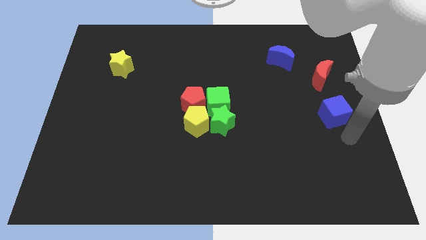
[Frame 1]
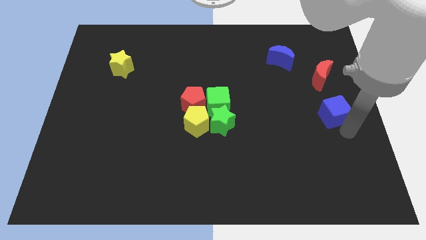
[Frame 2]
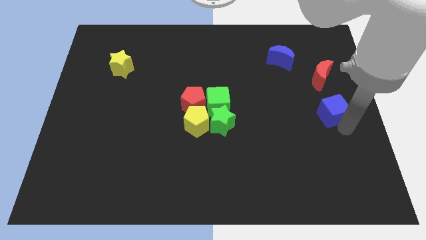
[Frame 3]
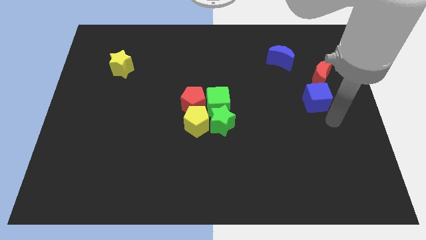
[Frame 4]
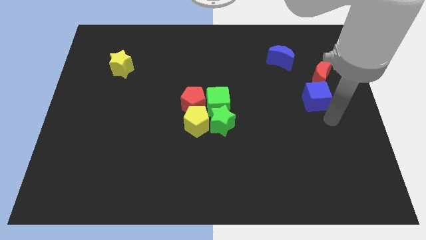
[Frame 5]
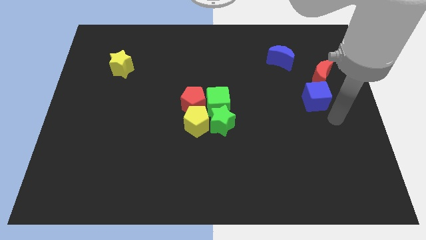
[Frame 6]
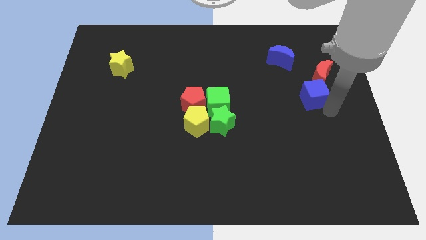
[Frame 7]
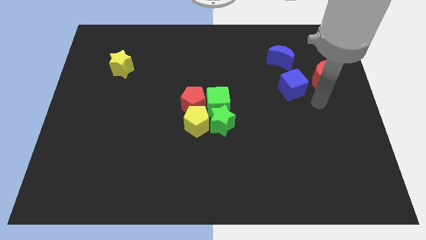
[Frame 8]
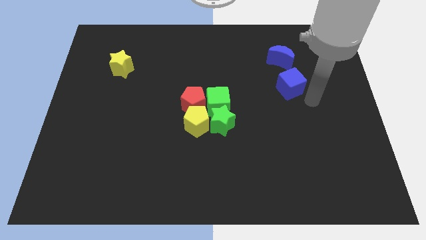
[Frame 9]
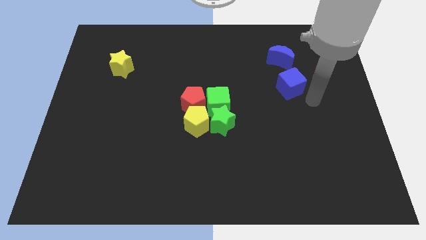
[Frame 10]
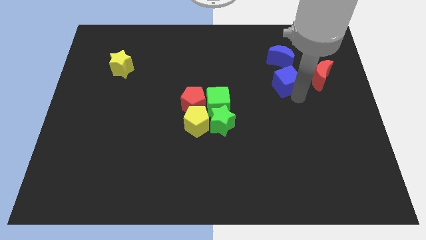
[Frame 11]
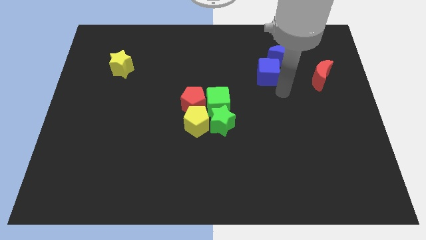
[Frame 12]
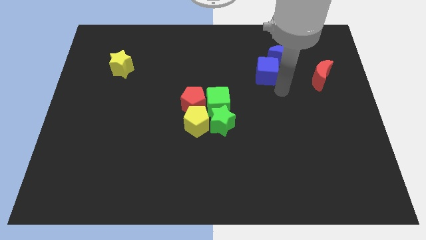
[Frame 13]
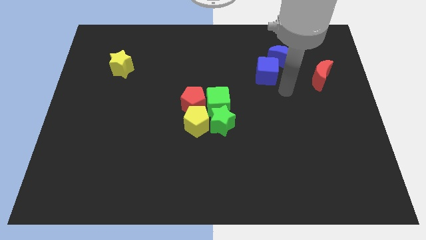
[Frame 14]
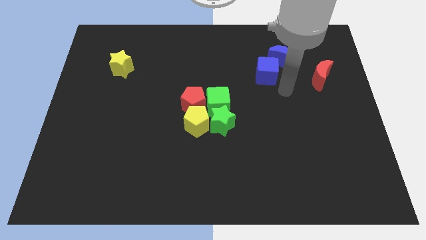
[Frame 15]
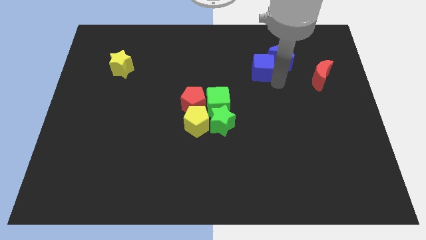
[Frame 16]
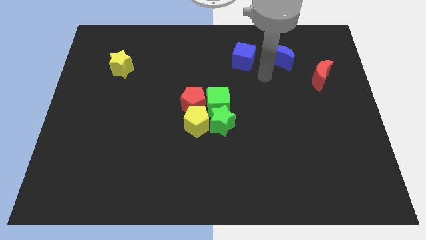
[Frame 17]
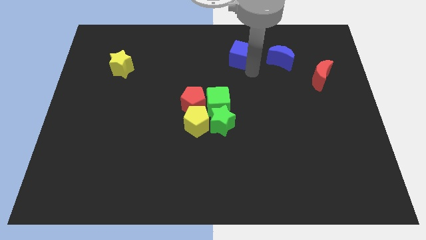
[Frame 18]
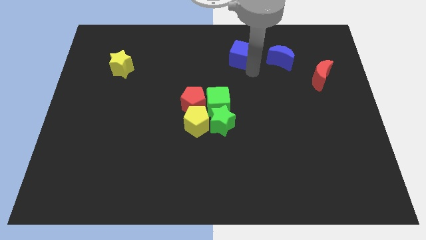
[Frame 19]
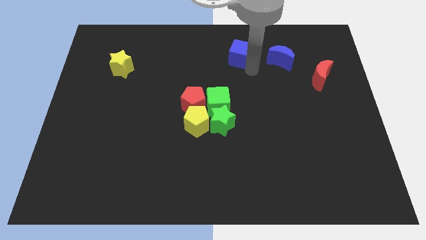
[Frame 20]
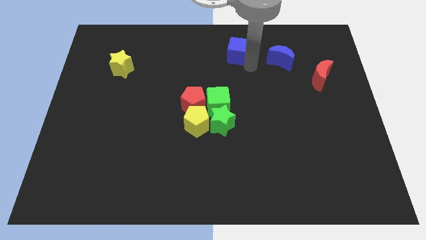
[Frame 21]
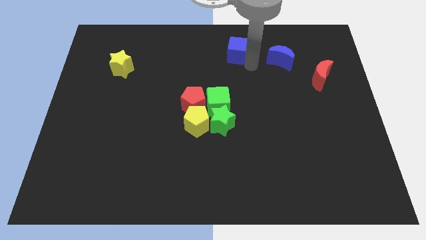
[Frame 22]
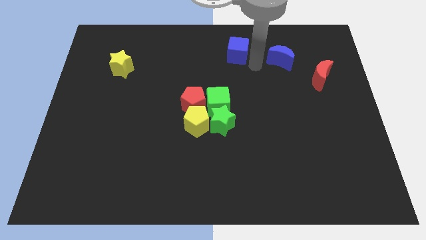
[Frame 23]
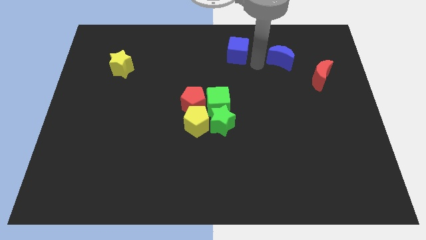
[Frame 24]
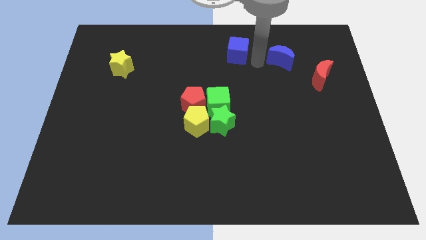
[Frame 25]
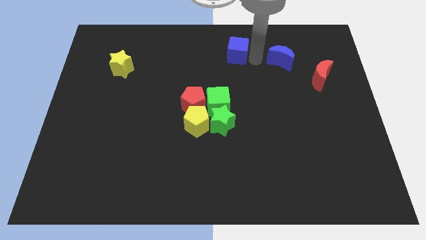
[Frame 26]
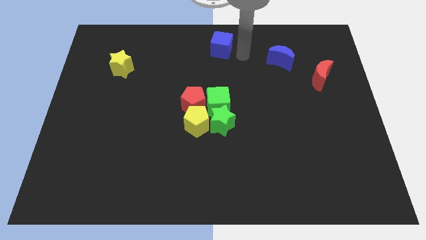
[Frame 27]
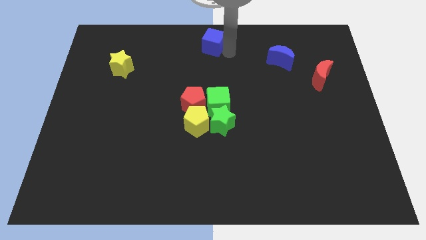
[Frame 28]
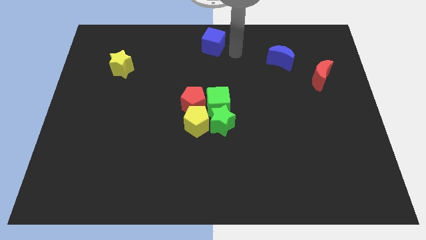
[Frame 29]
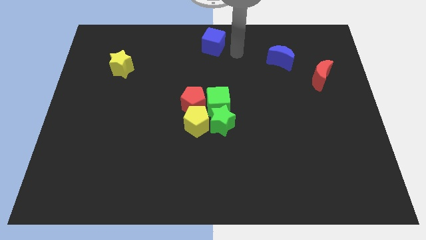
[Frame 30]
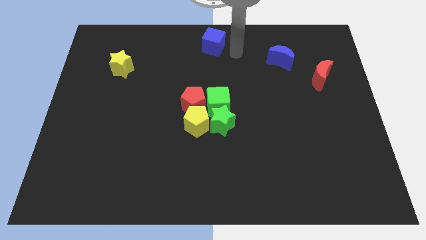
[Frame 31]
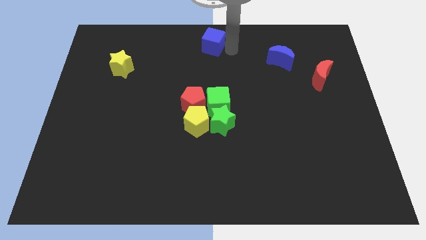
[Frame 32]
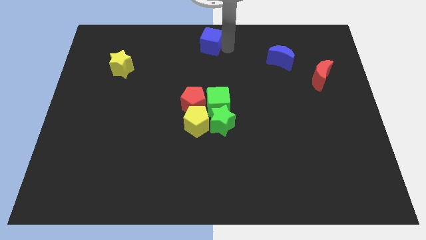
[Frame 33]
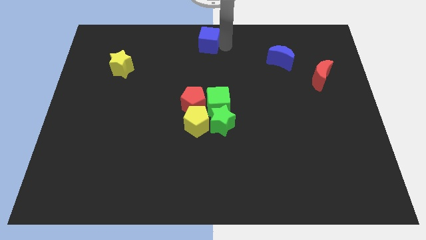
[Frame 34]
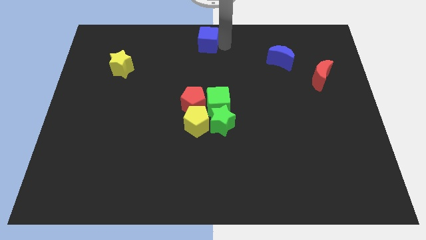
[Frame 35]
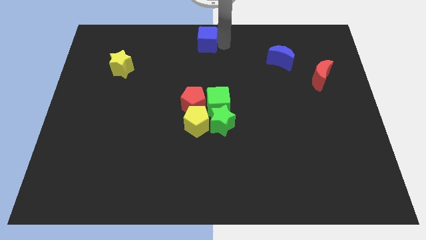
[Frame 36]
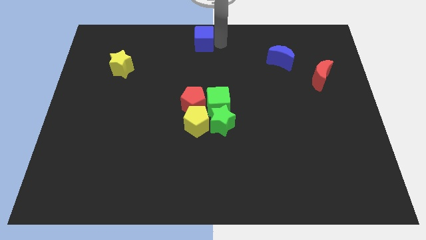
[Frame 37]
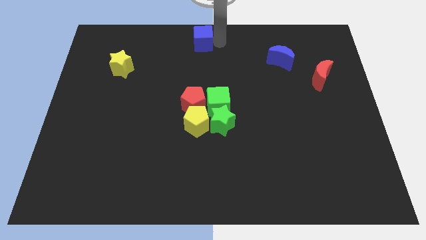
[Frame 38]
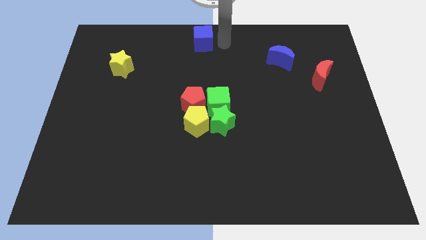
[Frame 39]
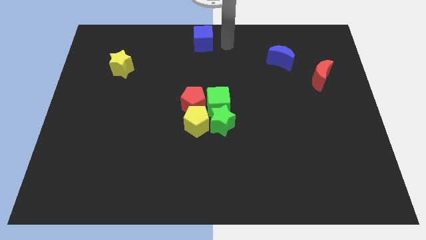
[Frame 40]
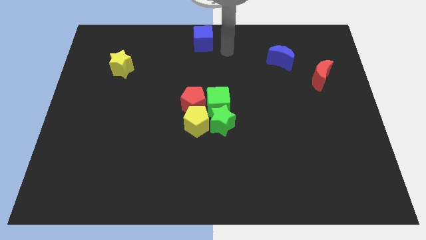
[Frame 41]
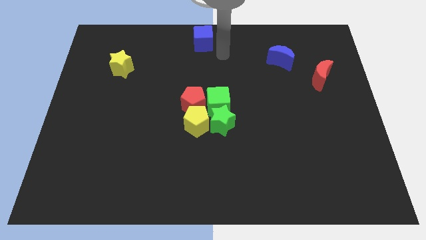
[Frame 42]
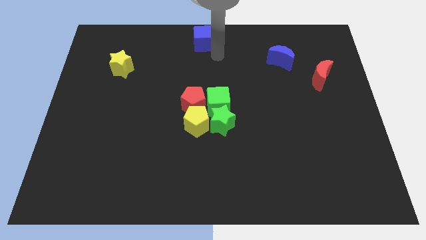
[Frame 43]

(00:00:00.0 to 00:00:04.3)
move the blue cube to the top center of the board

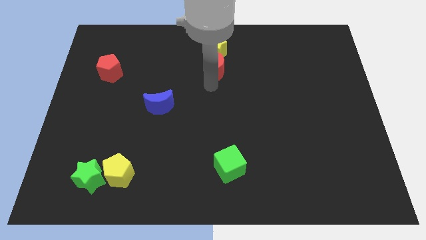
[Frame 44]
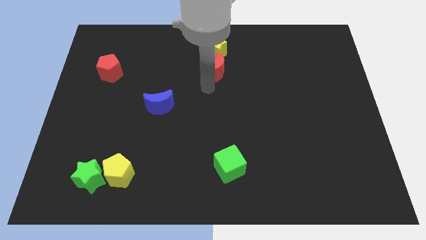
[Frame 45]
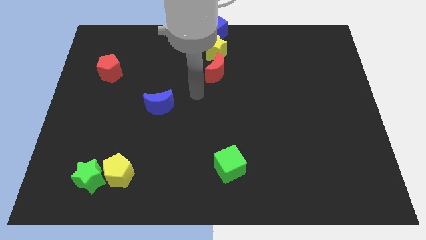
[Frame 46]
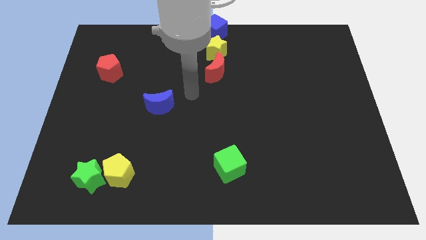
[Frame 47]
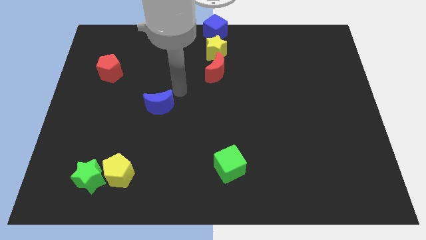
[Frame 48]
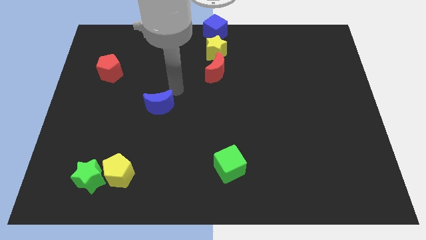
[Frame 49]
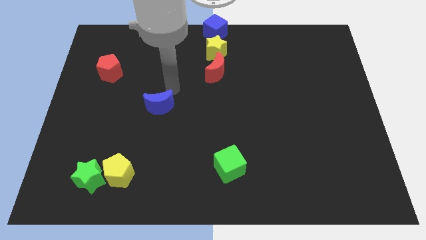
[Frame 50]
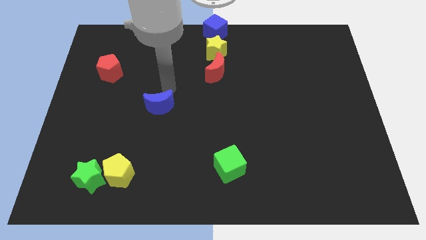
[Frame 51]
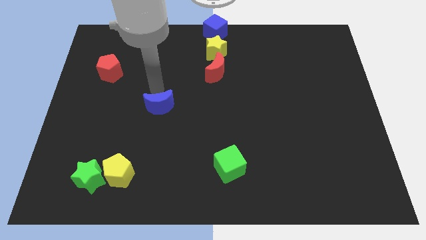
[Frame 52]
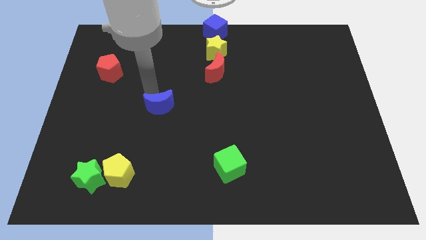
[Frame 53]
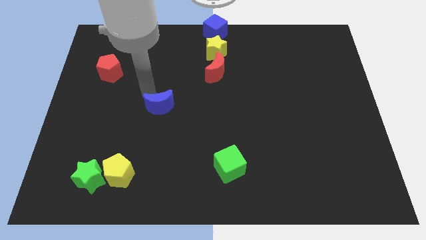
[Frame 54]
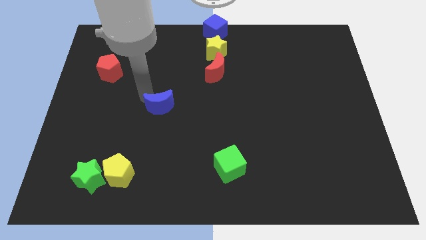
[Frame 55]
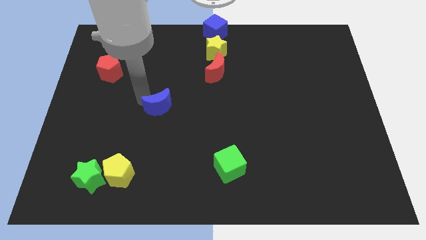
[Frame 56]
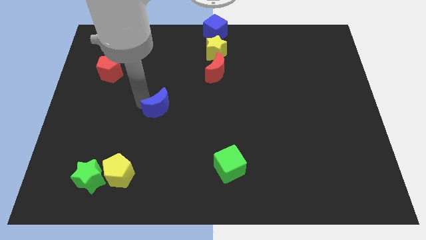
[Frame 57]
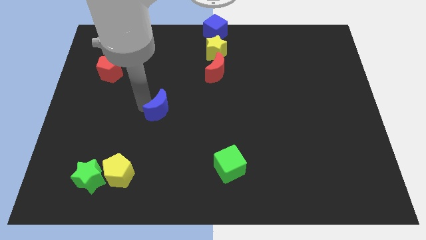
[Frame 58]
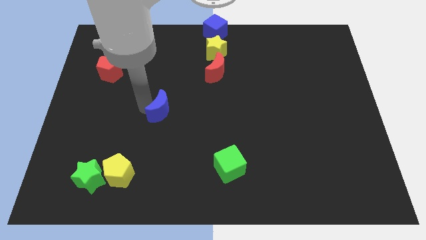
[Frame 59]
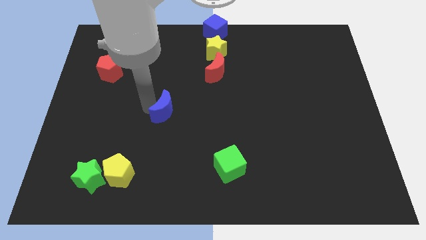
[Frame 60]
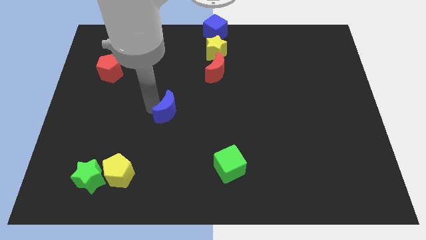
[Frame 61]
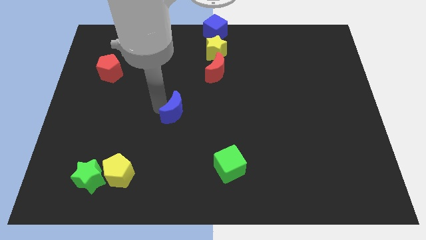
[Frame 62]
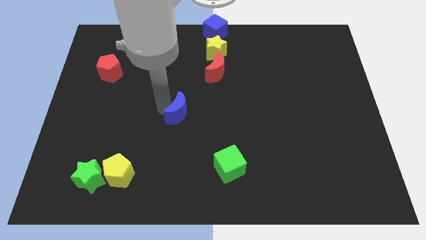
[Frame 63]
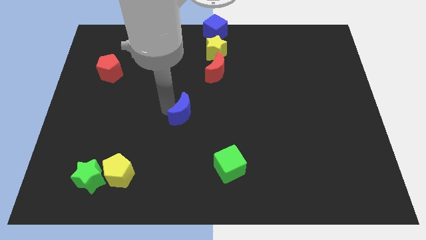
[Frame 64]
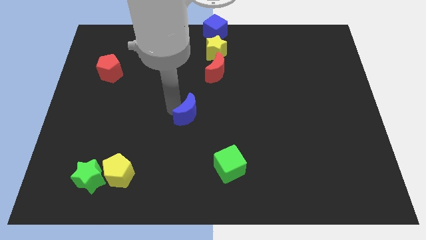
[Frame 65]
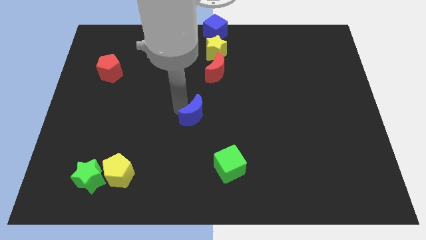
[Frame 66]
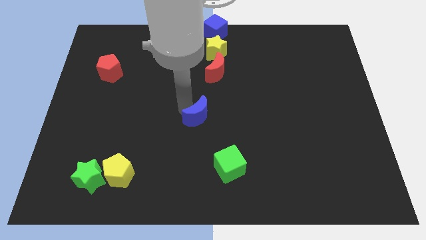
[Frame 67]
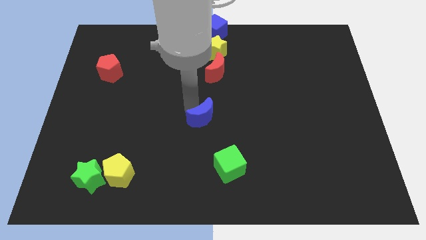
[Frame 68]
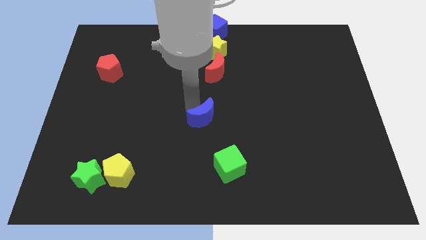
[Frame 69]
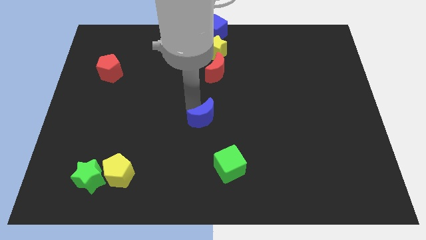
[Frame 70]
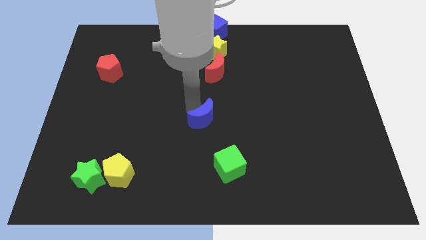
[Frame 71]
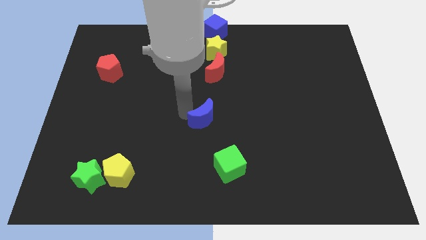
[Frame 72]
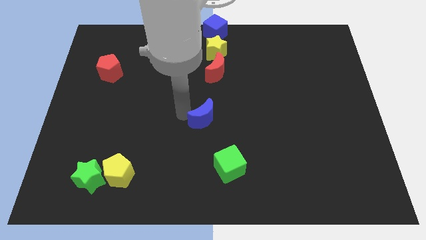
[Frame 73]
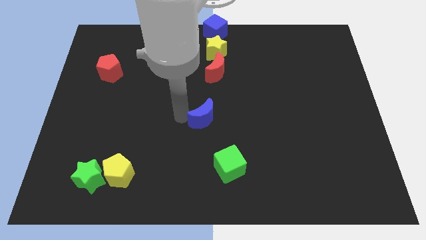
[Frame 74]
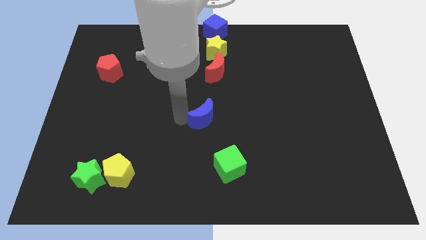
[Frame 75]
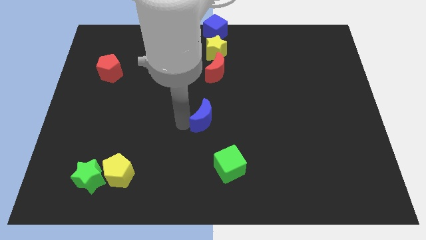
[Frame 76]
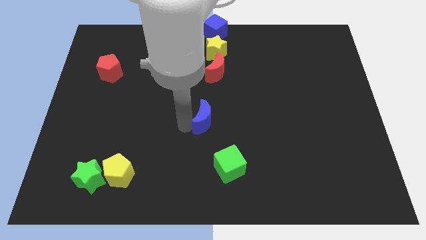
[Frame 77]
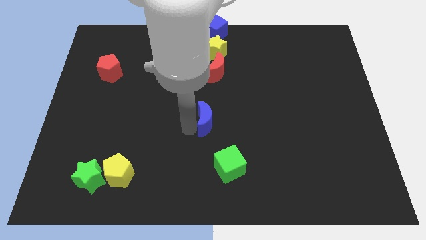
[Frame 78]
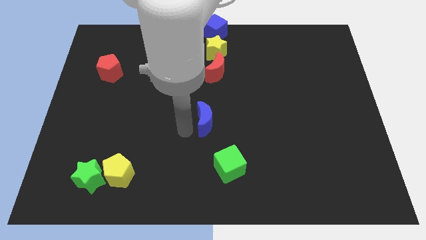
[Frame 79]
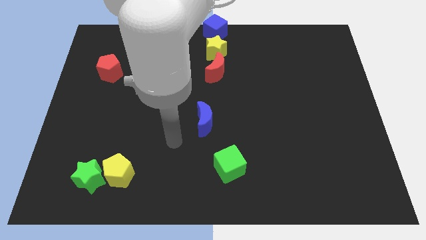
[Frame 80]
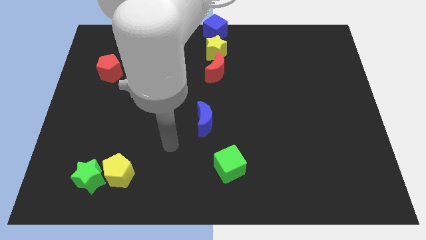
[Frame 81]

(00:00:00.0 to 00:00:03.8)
push the blue crescent to the center of the board

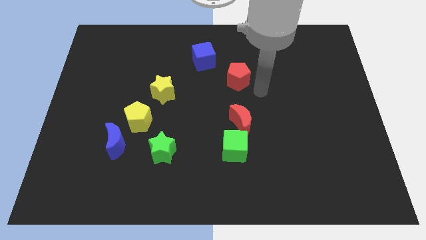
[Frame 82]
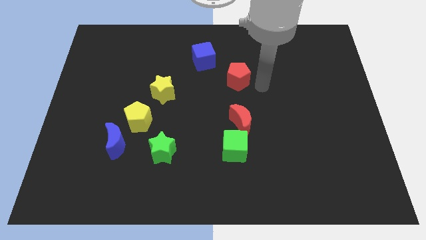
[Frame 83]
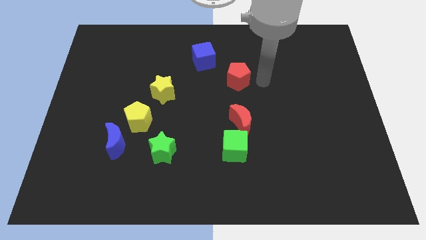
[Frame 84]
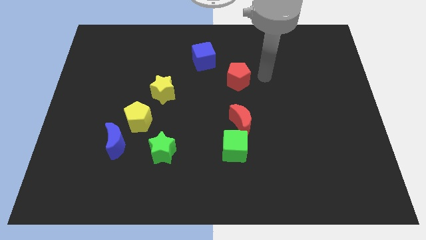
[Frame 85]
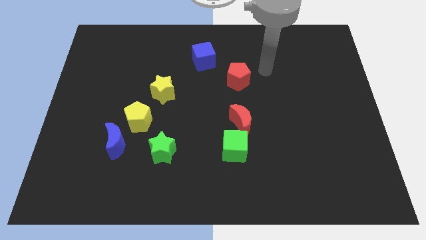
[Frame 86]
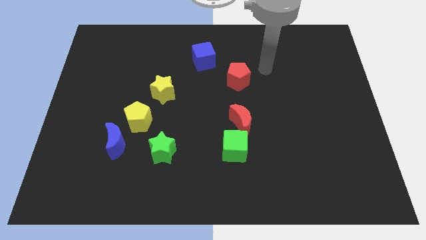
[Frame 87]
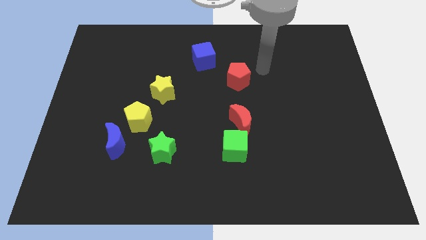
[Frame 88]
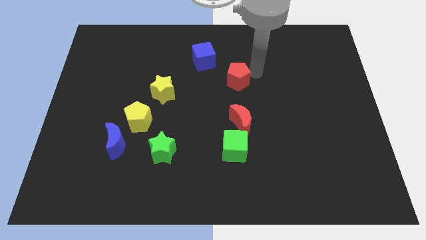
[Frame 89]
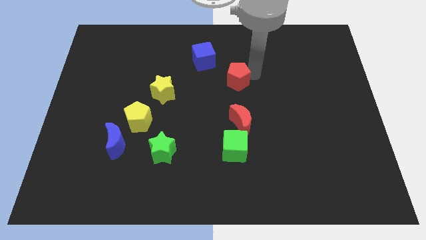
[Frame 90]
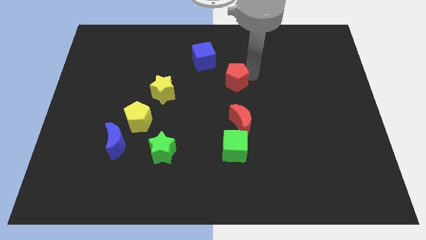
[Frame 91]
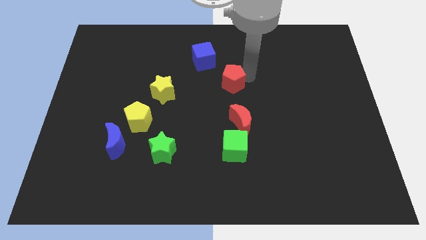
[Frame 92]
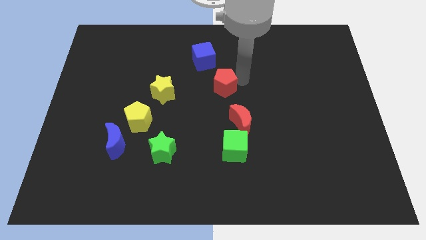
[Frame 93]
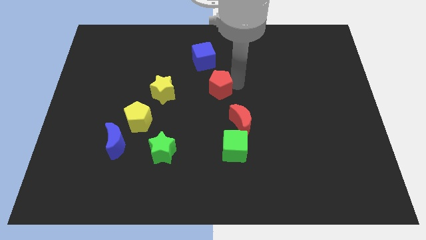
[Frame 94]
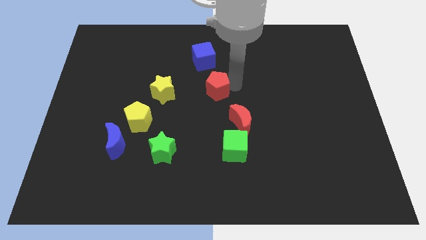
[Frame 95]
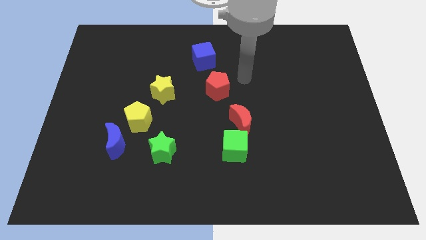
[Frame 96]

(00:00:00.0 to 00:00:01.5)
place red pentagon between blue cube and red moon
